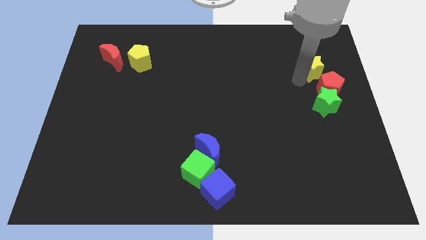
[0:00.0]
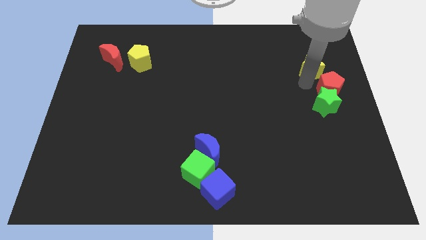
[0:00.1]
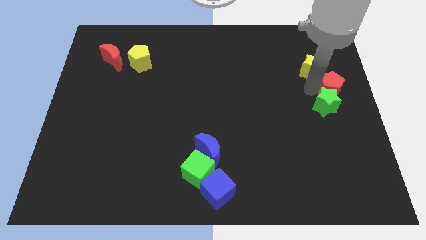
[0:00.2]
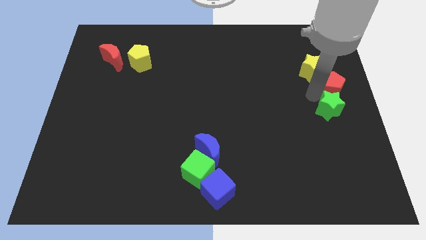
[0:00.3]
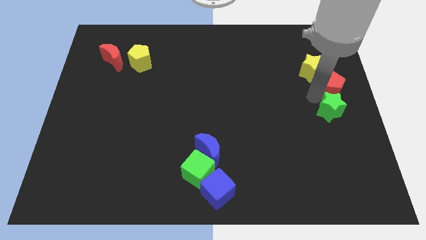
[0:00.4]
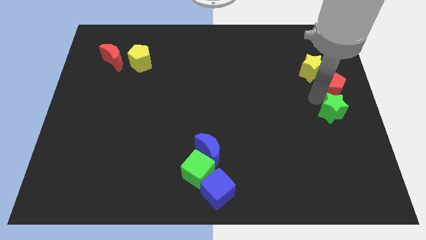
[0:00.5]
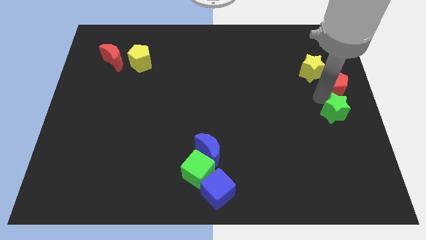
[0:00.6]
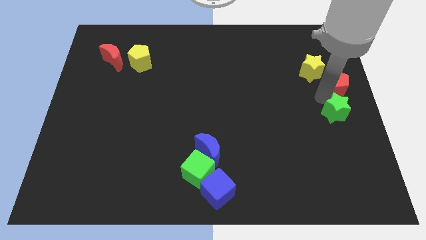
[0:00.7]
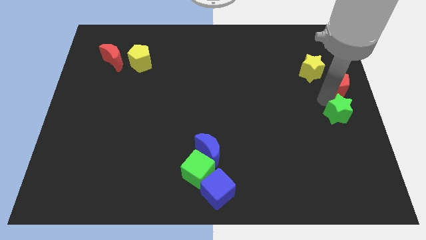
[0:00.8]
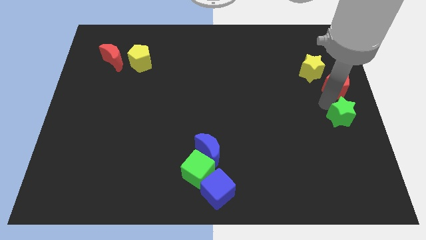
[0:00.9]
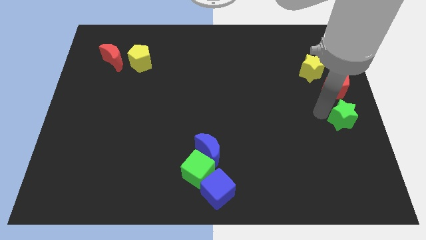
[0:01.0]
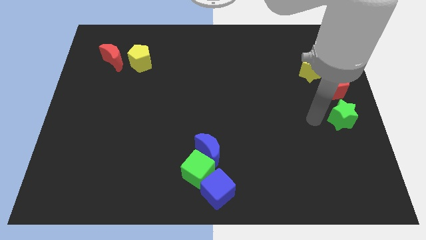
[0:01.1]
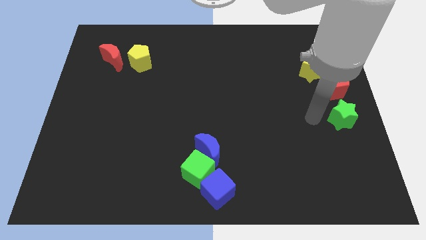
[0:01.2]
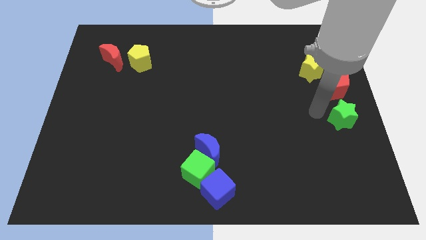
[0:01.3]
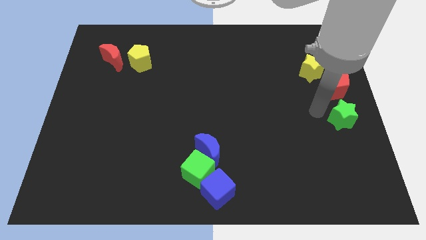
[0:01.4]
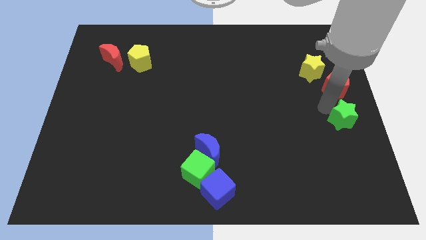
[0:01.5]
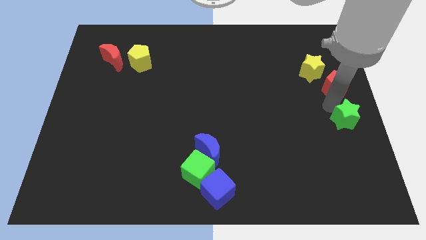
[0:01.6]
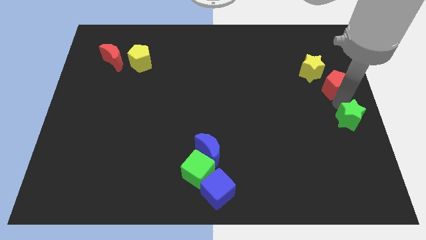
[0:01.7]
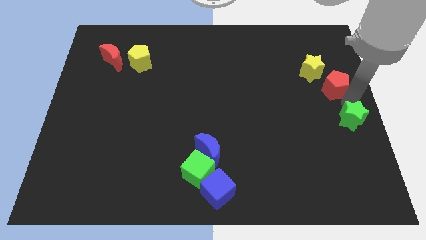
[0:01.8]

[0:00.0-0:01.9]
separate the red pentagon and green star

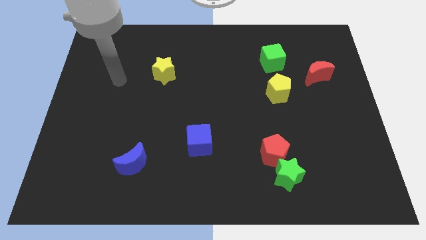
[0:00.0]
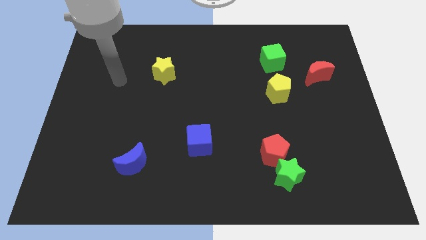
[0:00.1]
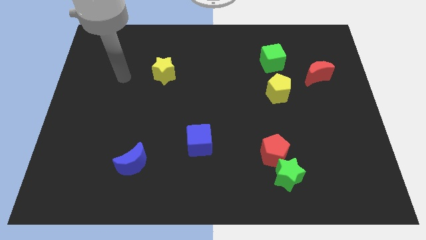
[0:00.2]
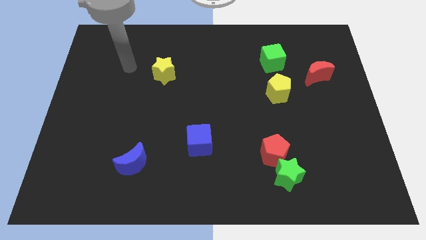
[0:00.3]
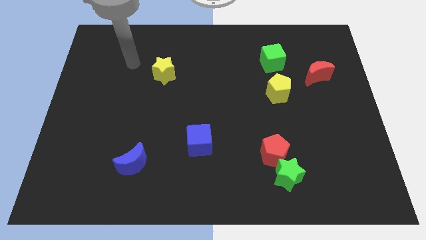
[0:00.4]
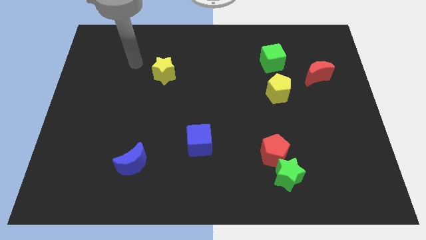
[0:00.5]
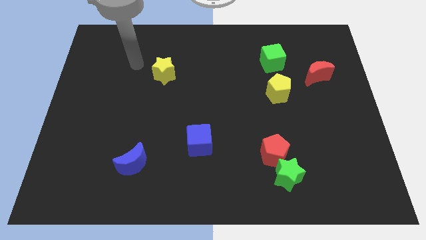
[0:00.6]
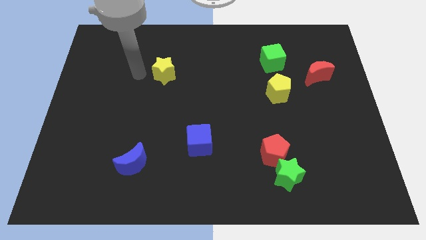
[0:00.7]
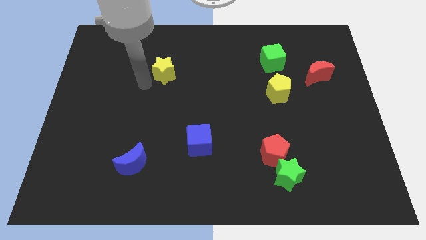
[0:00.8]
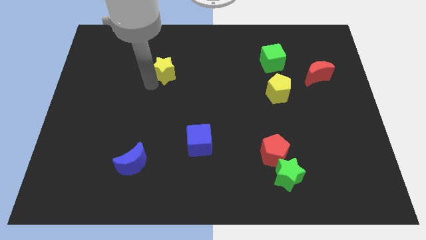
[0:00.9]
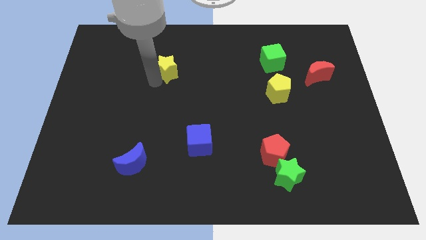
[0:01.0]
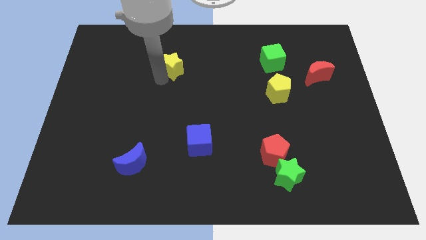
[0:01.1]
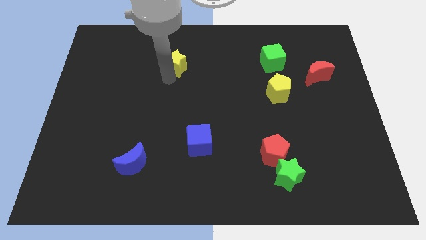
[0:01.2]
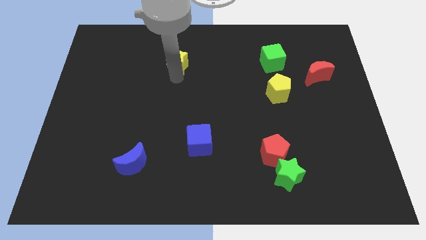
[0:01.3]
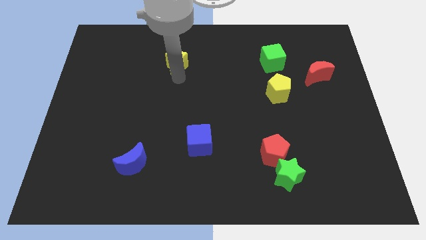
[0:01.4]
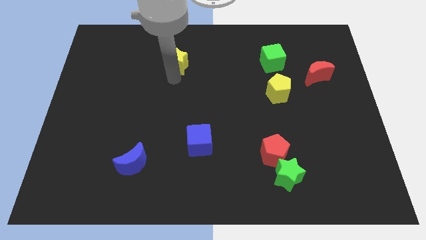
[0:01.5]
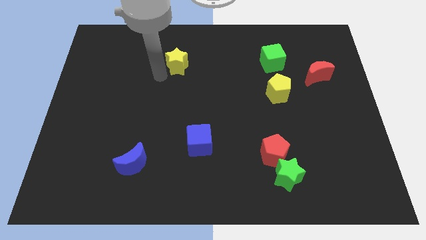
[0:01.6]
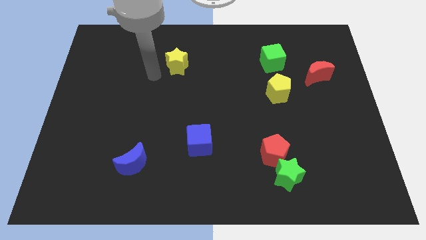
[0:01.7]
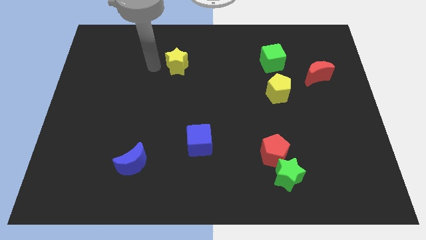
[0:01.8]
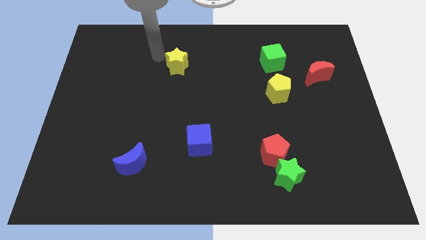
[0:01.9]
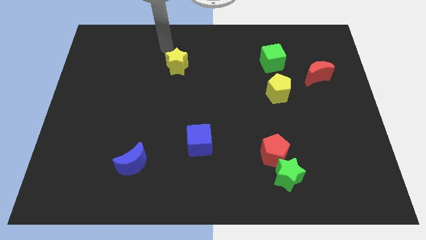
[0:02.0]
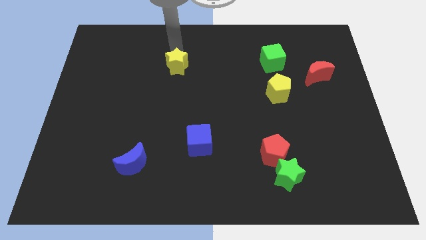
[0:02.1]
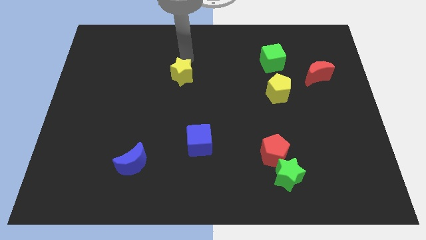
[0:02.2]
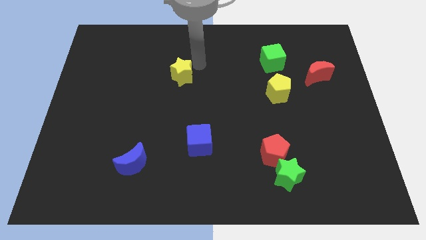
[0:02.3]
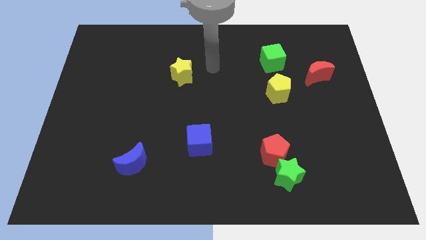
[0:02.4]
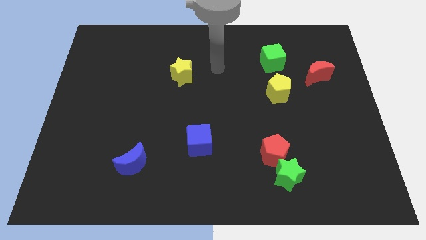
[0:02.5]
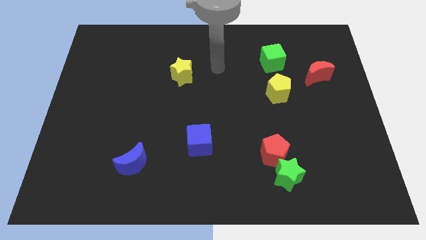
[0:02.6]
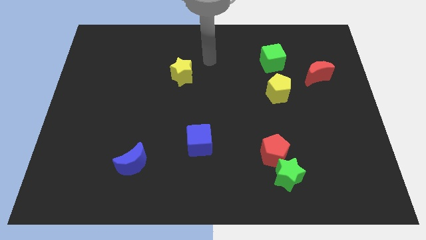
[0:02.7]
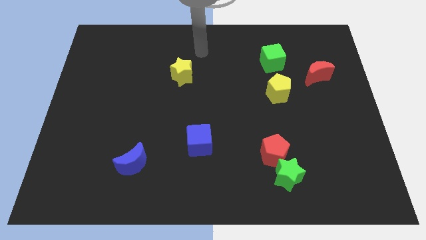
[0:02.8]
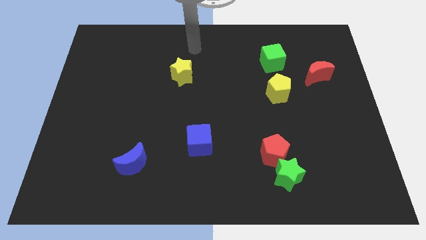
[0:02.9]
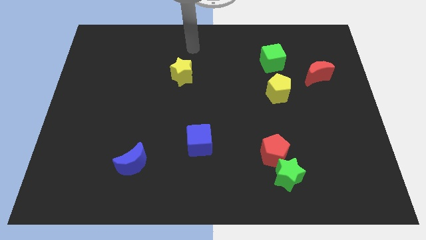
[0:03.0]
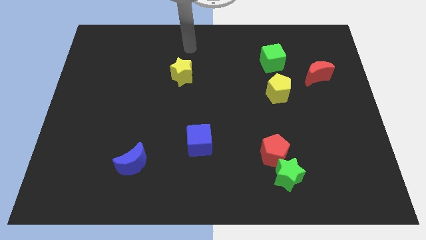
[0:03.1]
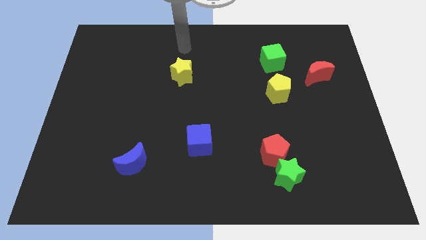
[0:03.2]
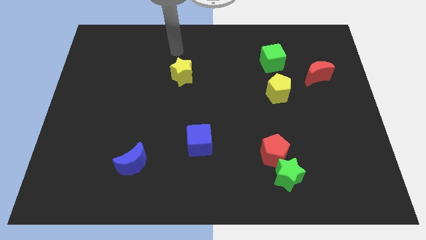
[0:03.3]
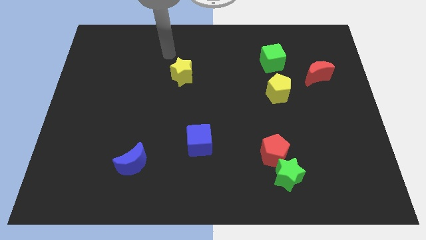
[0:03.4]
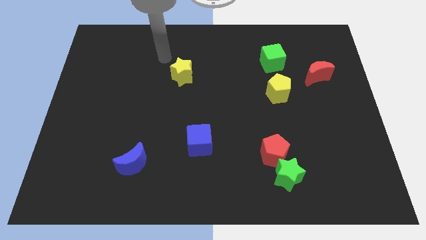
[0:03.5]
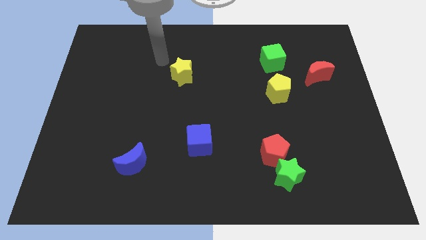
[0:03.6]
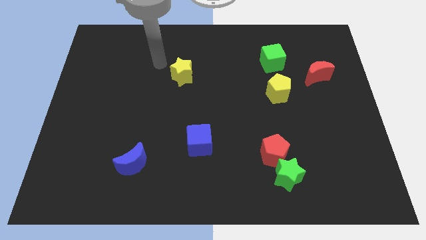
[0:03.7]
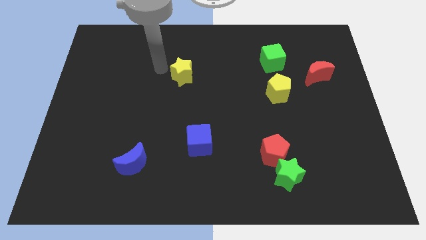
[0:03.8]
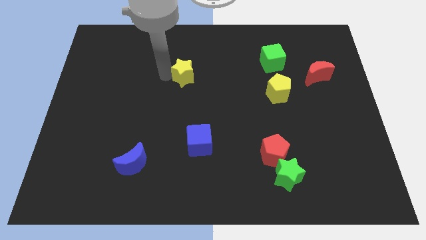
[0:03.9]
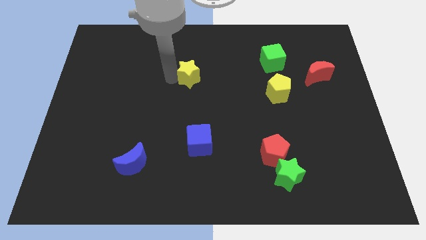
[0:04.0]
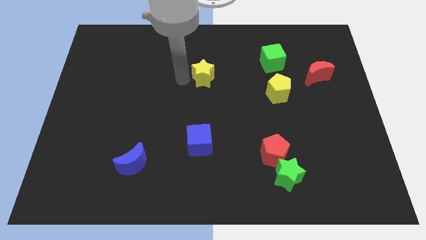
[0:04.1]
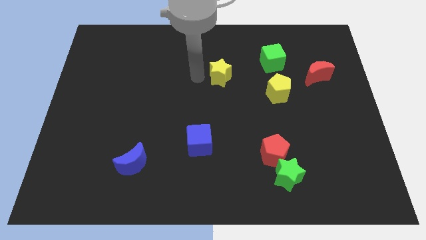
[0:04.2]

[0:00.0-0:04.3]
place the yellow star vertically at the top side of the blue cube

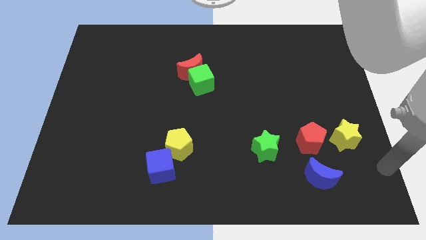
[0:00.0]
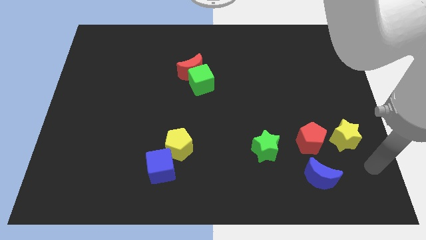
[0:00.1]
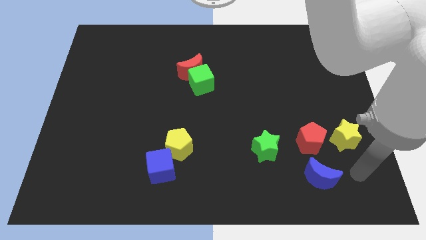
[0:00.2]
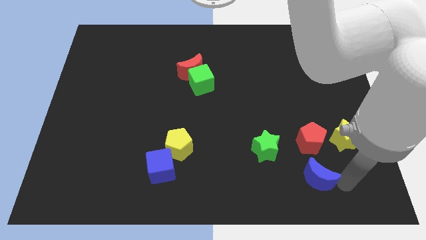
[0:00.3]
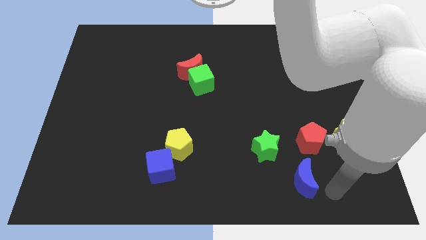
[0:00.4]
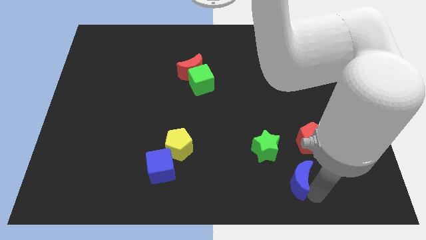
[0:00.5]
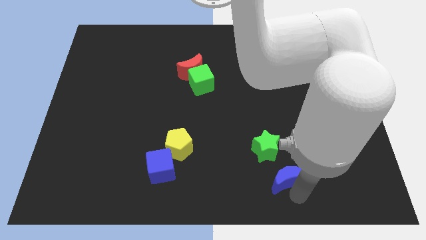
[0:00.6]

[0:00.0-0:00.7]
move the blue crescent slightly to the left of the board

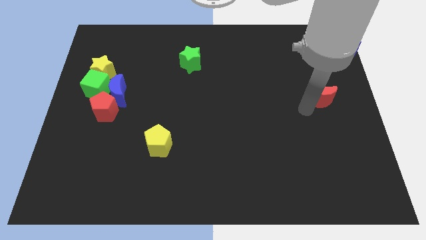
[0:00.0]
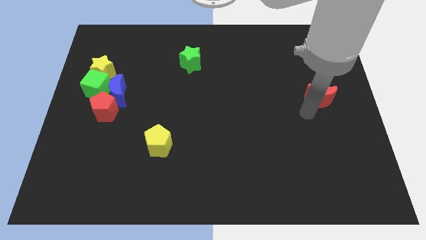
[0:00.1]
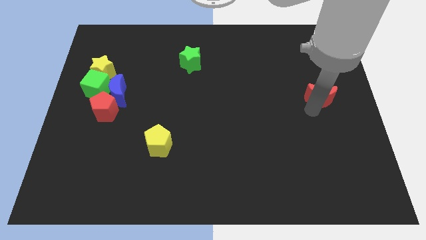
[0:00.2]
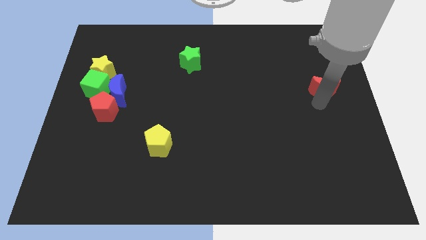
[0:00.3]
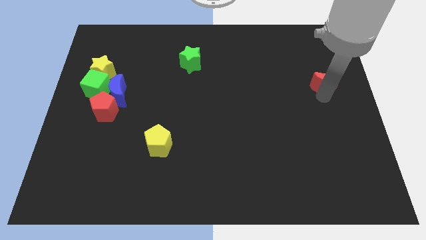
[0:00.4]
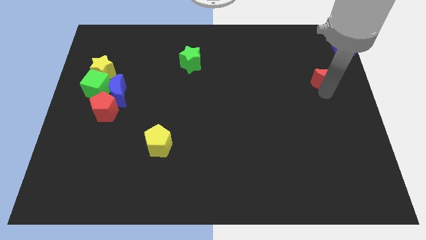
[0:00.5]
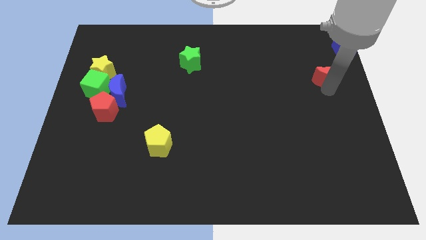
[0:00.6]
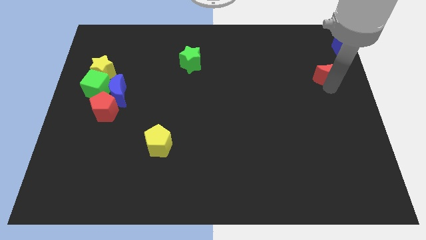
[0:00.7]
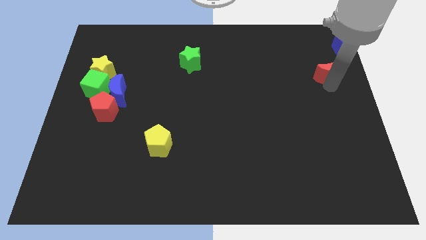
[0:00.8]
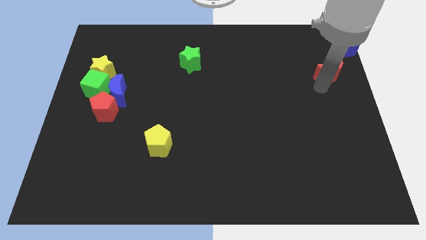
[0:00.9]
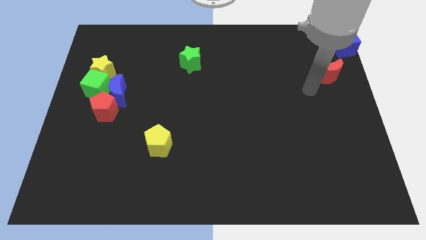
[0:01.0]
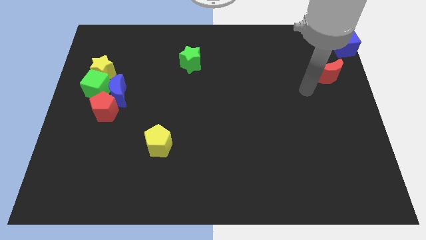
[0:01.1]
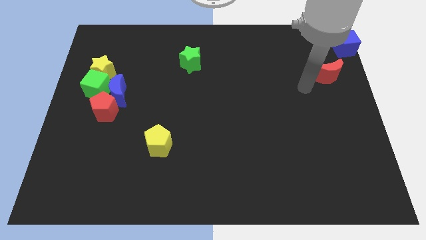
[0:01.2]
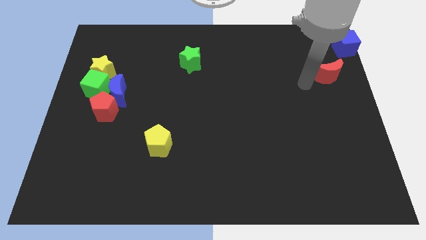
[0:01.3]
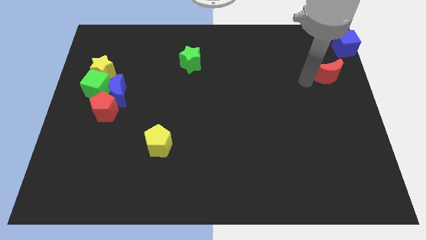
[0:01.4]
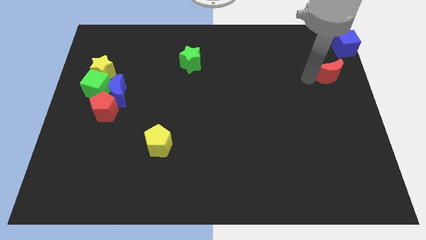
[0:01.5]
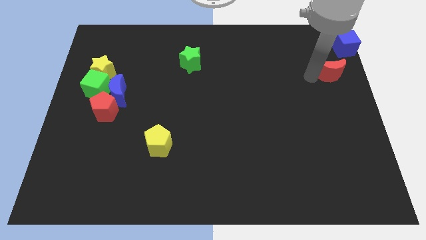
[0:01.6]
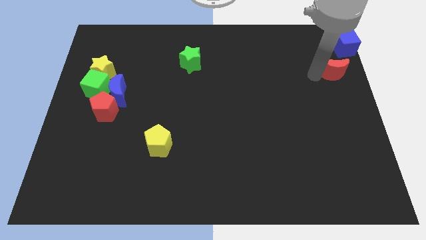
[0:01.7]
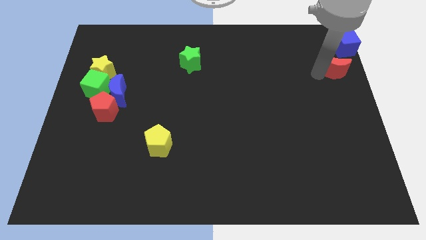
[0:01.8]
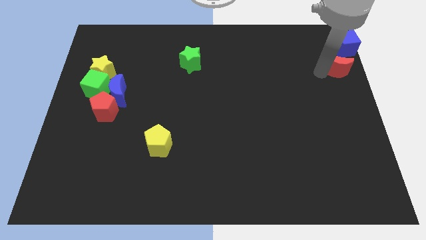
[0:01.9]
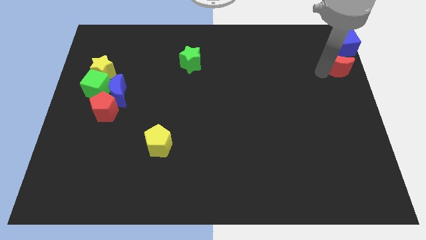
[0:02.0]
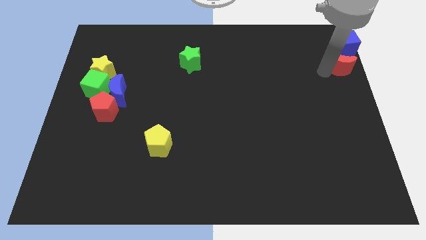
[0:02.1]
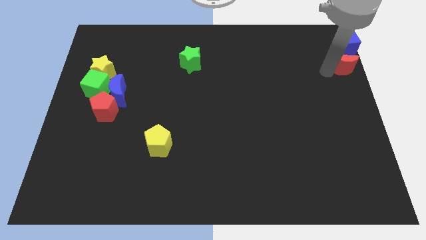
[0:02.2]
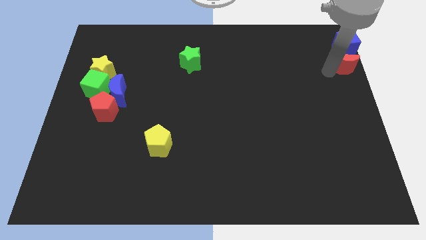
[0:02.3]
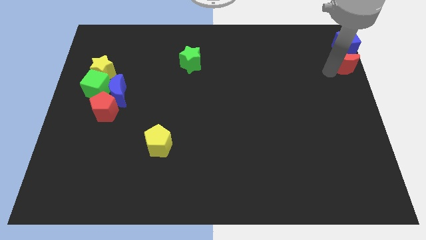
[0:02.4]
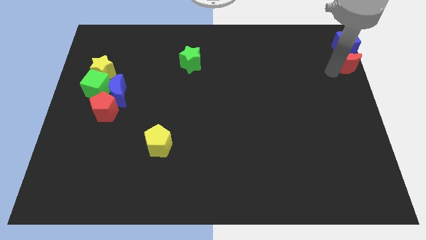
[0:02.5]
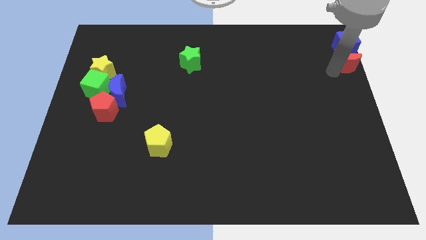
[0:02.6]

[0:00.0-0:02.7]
move red moon into blue cube
